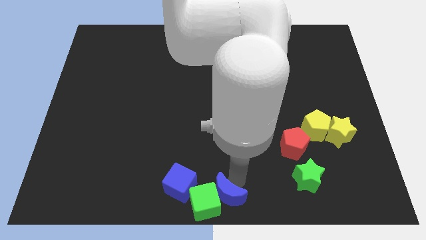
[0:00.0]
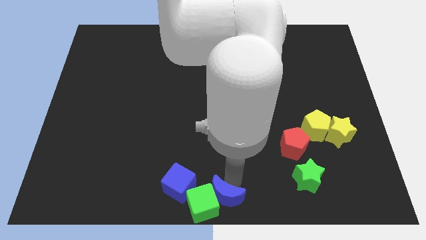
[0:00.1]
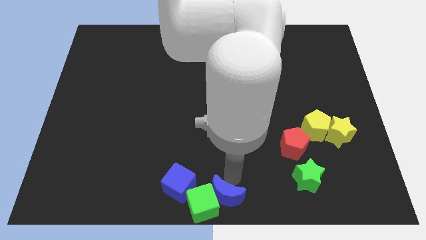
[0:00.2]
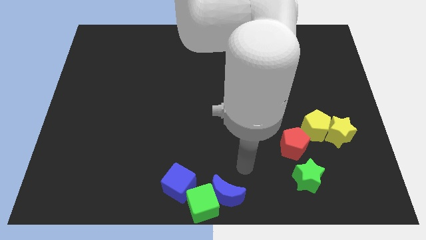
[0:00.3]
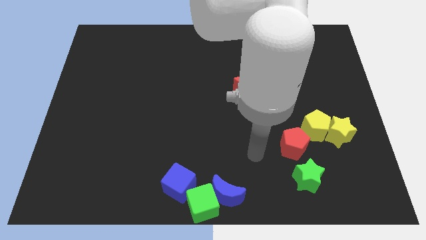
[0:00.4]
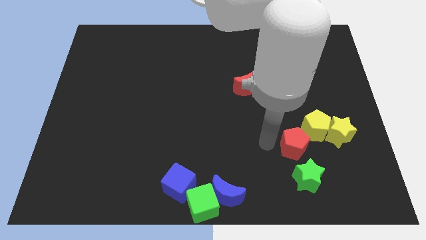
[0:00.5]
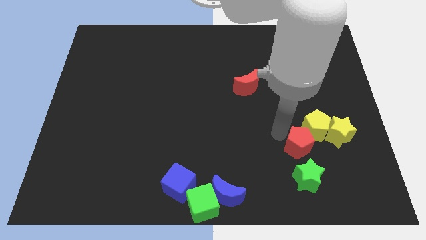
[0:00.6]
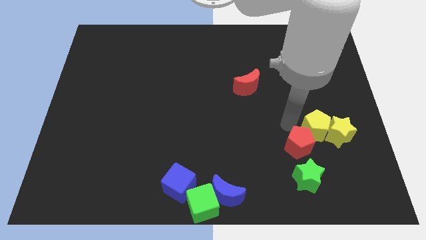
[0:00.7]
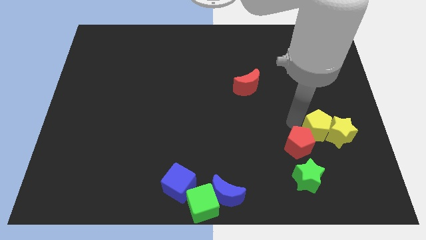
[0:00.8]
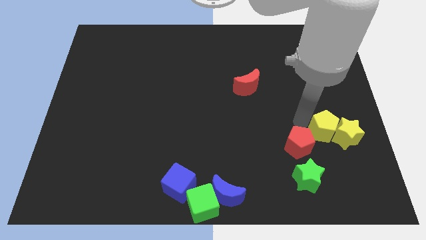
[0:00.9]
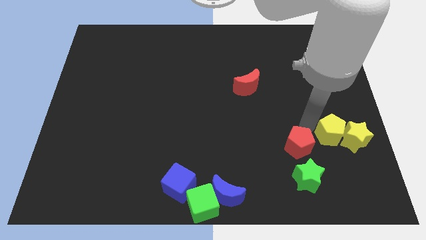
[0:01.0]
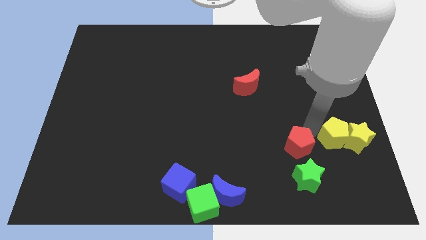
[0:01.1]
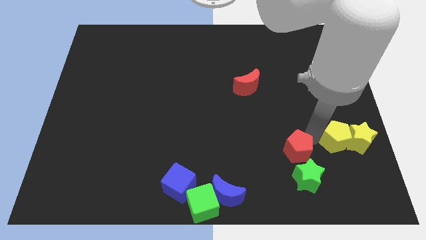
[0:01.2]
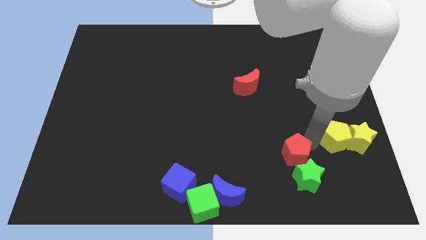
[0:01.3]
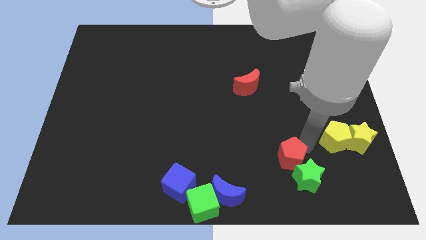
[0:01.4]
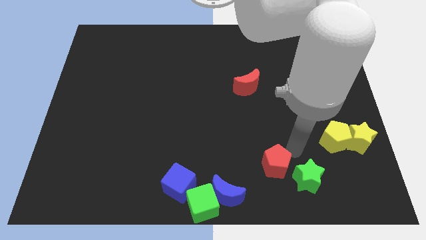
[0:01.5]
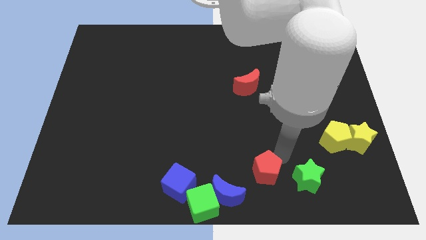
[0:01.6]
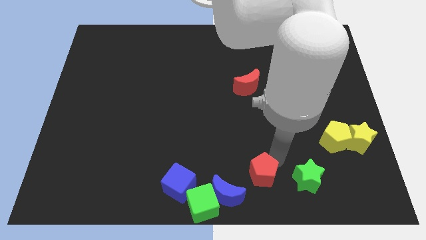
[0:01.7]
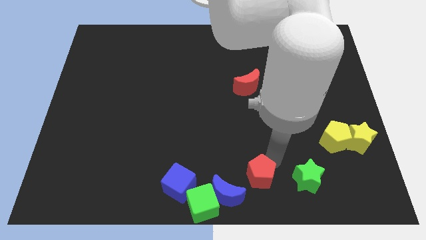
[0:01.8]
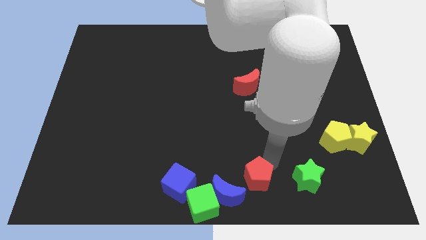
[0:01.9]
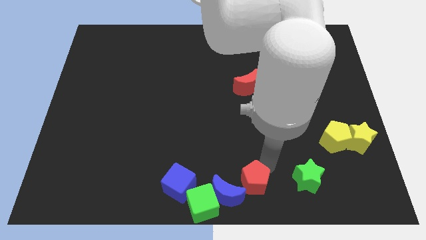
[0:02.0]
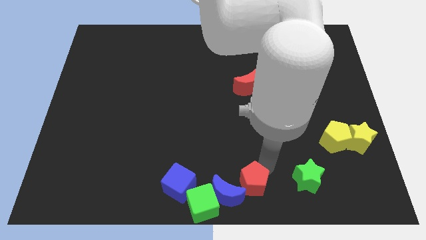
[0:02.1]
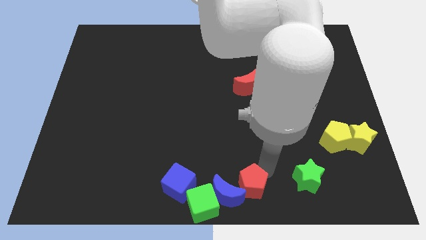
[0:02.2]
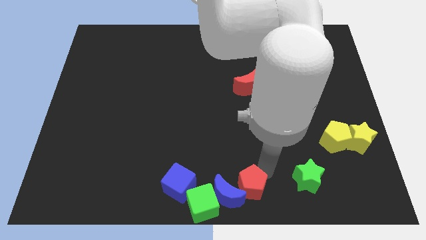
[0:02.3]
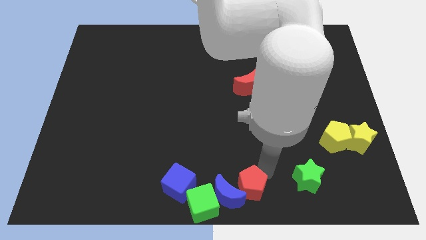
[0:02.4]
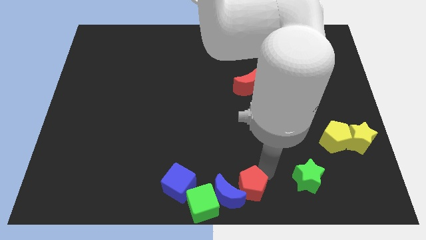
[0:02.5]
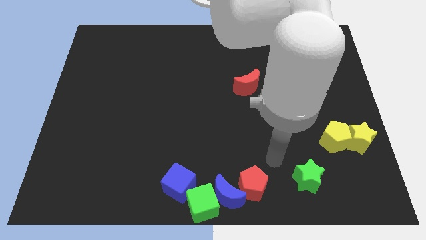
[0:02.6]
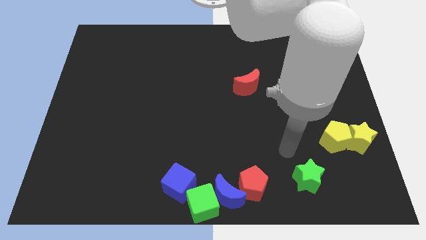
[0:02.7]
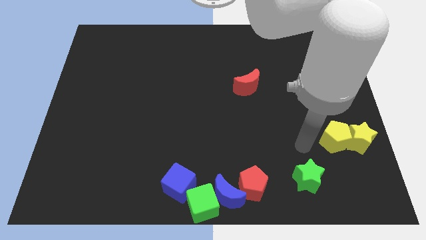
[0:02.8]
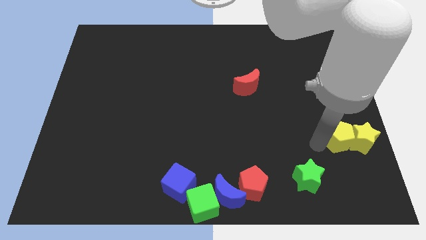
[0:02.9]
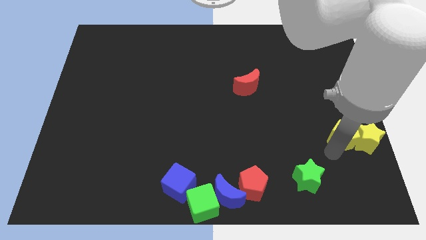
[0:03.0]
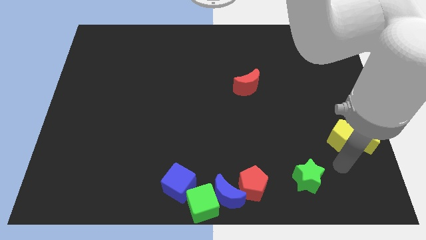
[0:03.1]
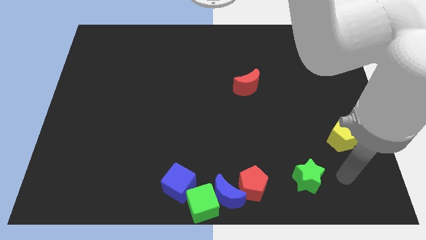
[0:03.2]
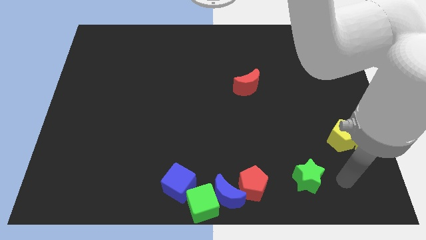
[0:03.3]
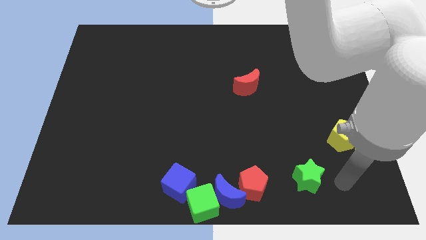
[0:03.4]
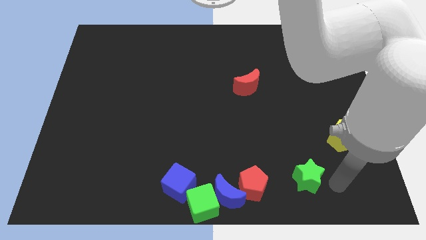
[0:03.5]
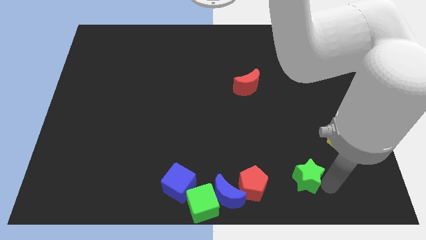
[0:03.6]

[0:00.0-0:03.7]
place your arm at the right side of the green star

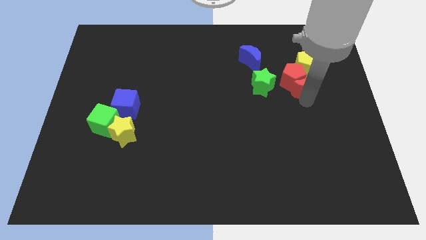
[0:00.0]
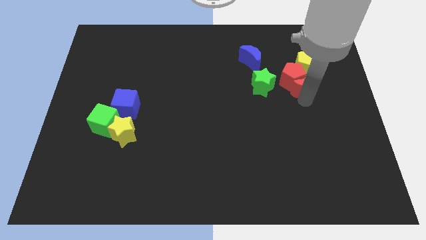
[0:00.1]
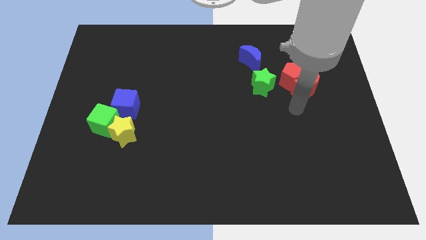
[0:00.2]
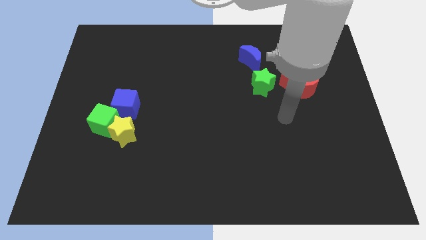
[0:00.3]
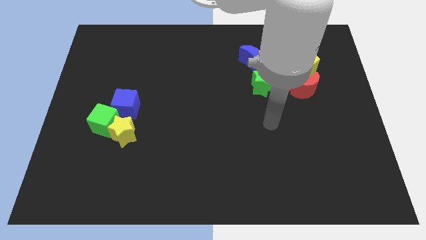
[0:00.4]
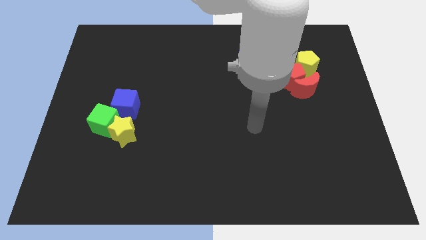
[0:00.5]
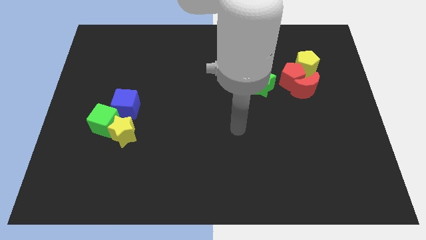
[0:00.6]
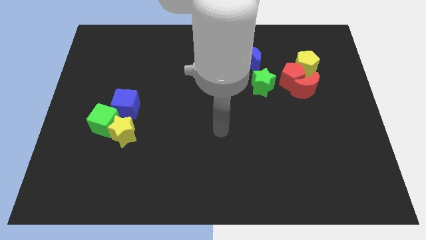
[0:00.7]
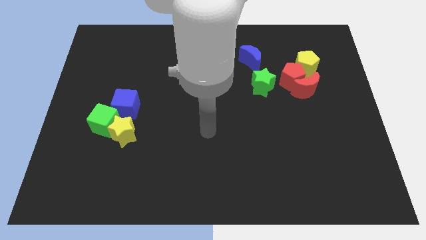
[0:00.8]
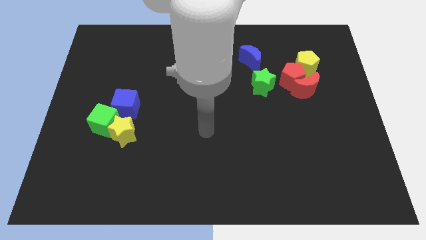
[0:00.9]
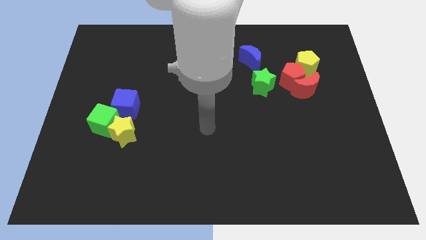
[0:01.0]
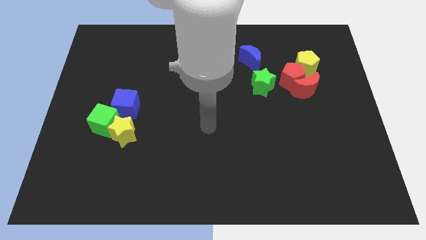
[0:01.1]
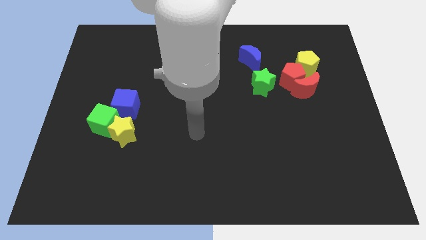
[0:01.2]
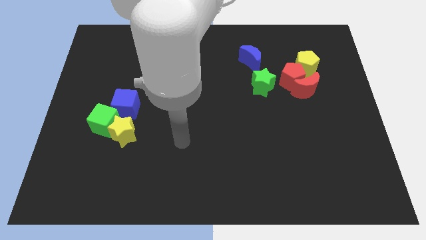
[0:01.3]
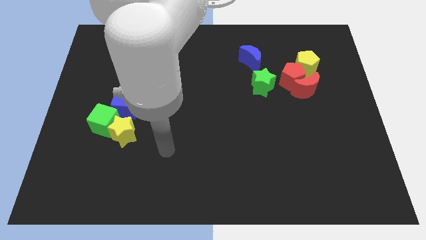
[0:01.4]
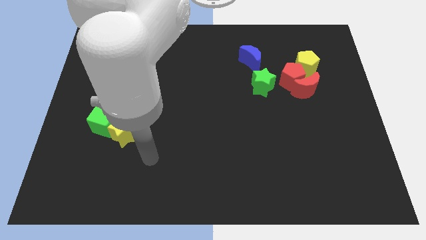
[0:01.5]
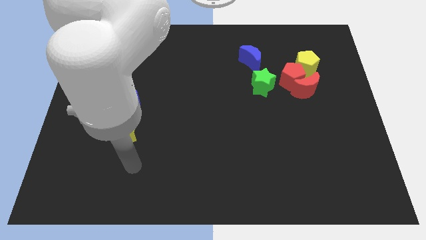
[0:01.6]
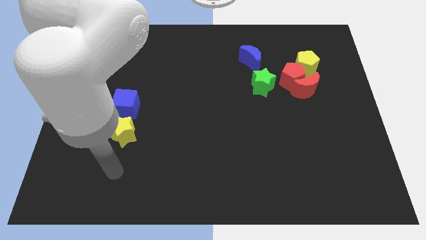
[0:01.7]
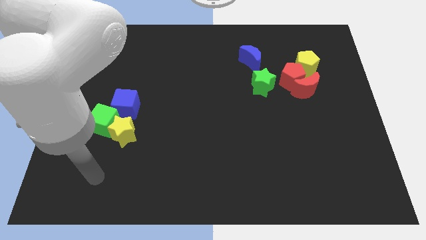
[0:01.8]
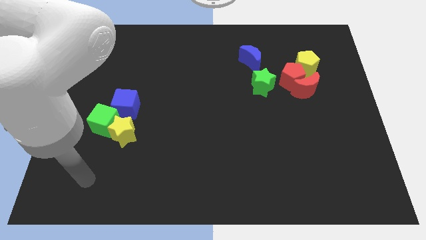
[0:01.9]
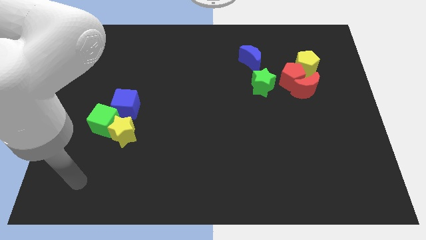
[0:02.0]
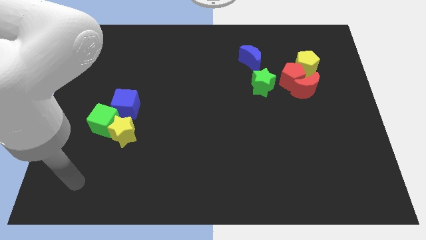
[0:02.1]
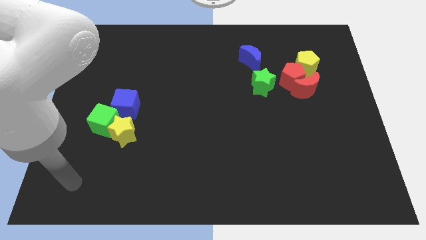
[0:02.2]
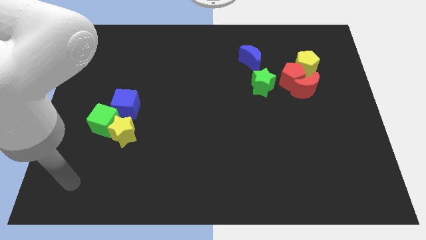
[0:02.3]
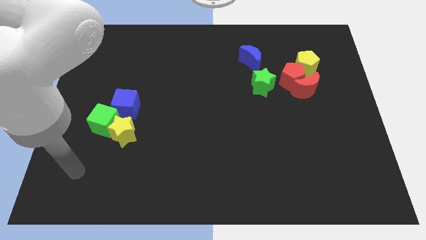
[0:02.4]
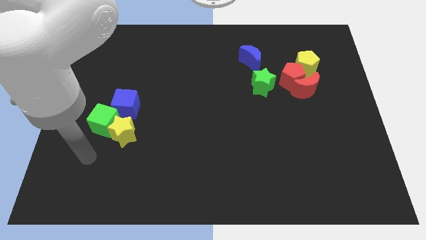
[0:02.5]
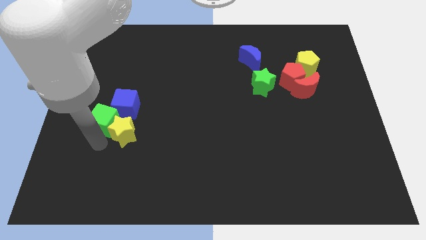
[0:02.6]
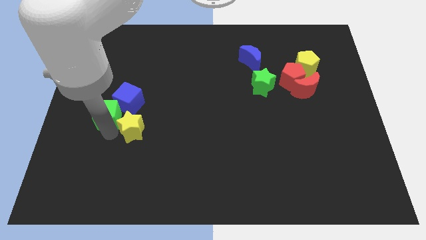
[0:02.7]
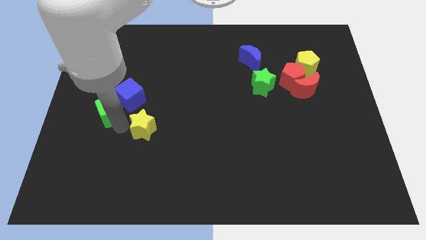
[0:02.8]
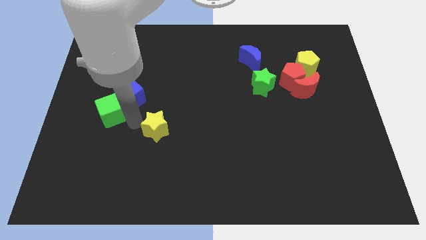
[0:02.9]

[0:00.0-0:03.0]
separate the green cube and yellow star

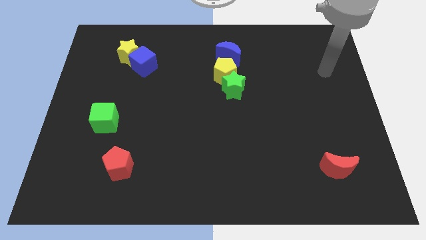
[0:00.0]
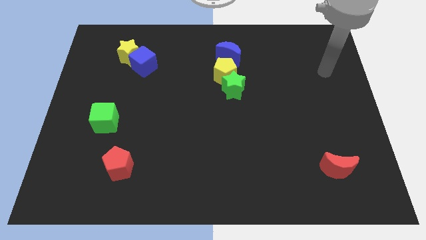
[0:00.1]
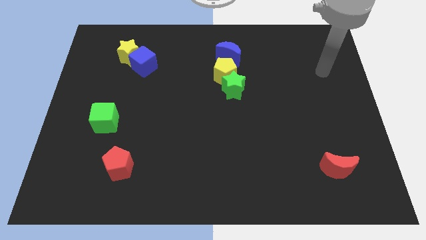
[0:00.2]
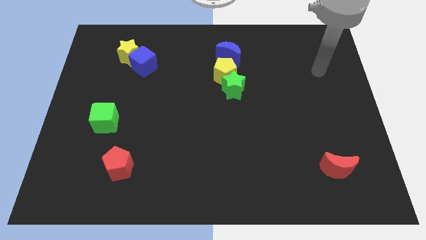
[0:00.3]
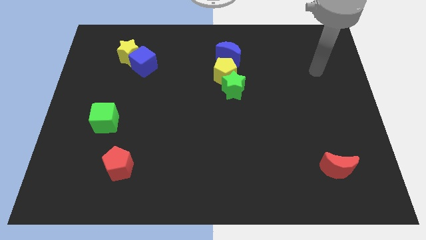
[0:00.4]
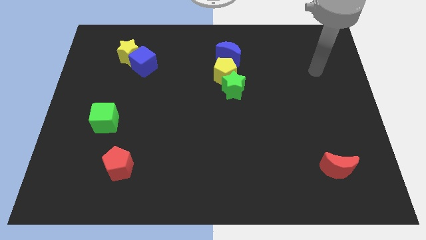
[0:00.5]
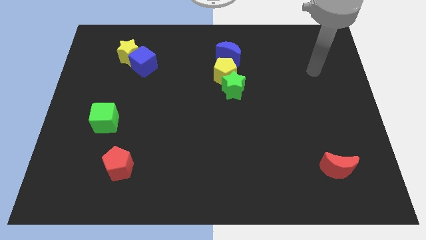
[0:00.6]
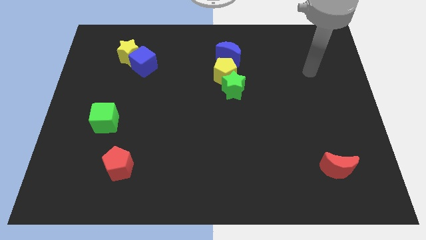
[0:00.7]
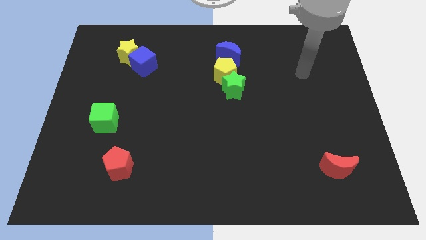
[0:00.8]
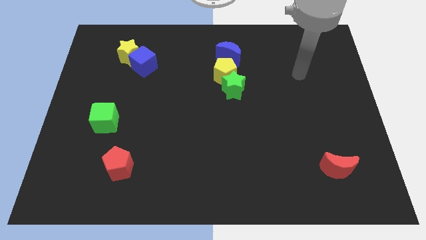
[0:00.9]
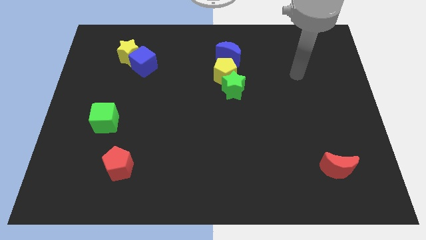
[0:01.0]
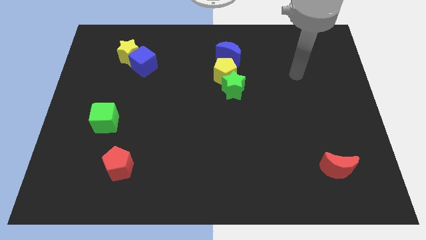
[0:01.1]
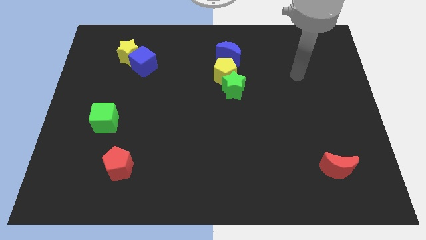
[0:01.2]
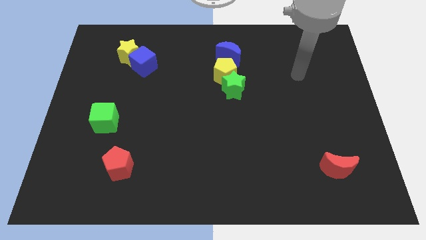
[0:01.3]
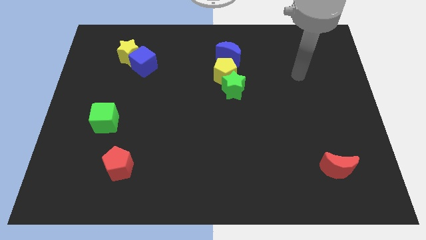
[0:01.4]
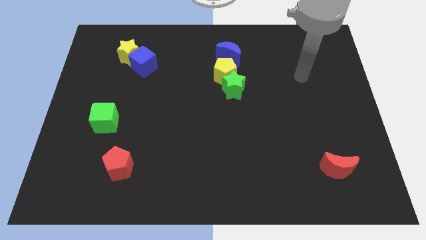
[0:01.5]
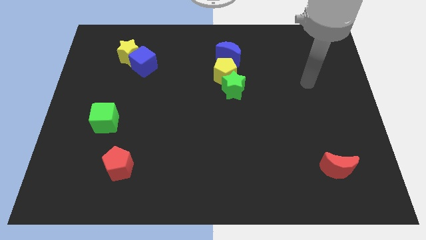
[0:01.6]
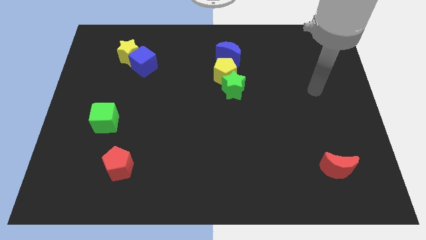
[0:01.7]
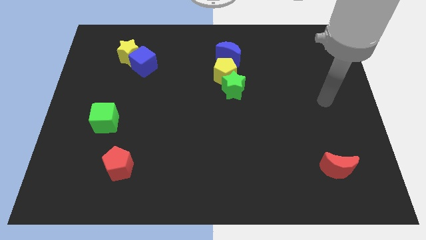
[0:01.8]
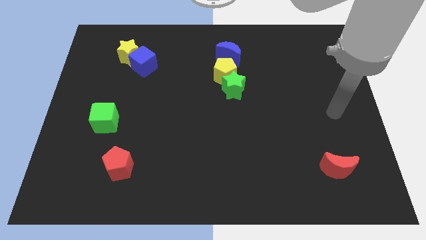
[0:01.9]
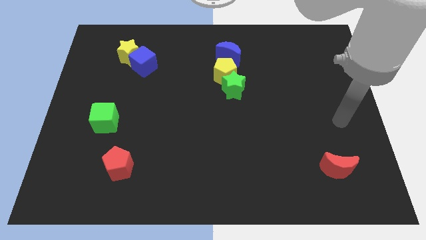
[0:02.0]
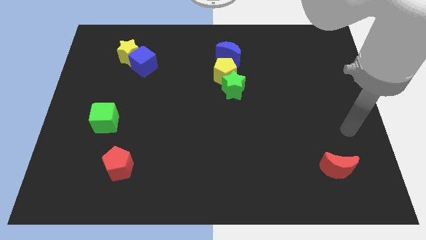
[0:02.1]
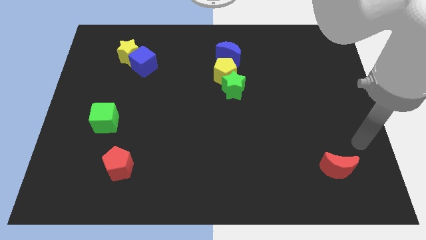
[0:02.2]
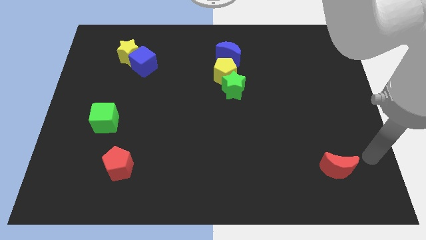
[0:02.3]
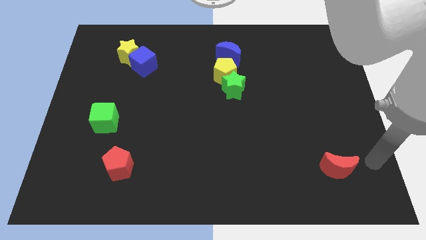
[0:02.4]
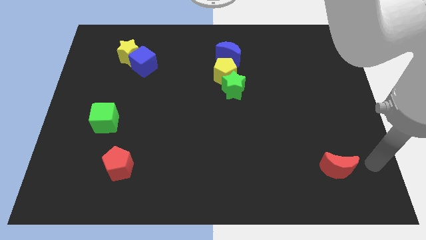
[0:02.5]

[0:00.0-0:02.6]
move your arm towards the bottom right corner of the board
